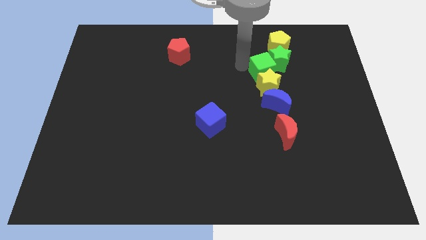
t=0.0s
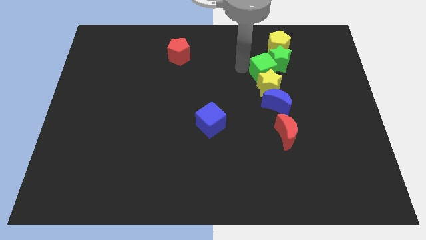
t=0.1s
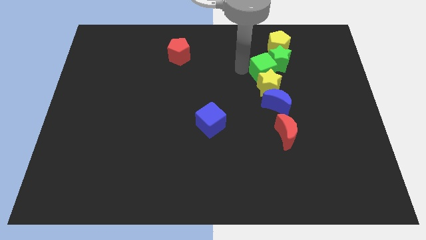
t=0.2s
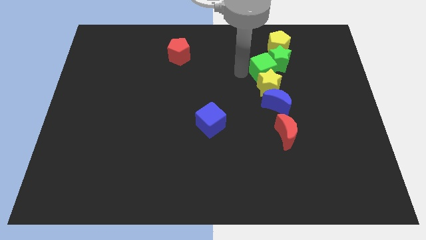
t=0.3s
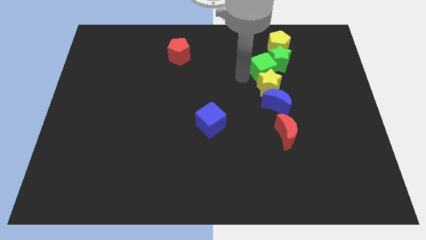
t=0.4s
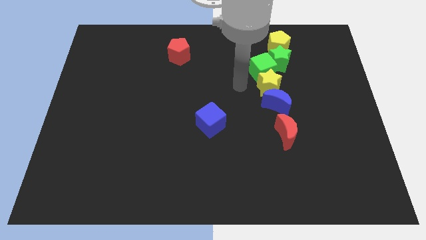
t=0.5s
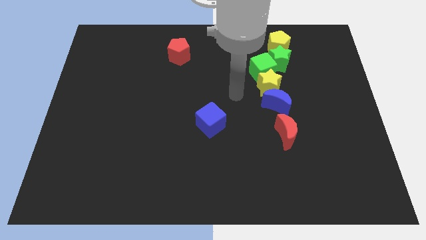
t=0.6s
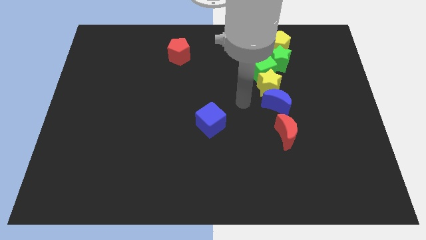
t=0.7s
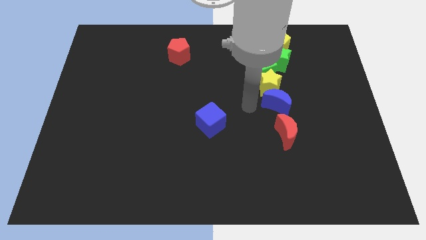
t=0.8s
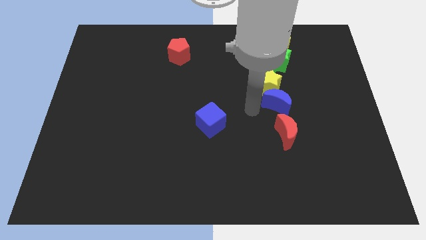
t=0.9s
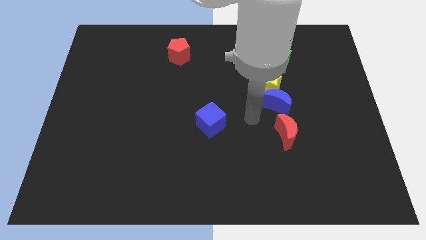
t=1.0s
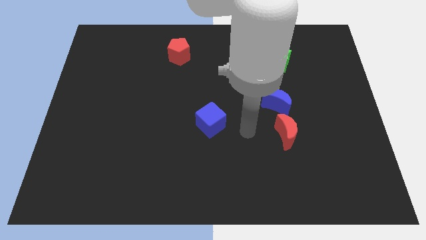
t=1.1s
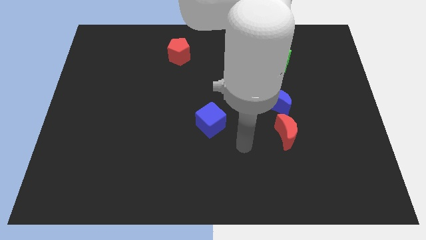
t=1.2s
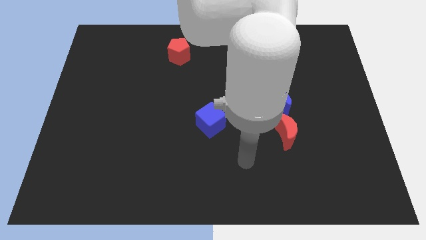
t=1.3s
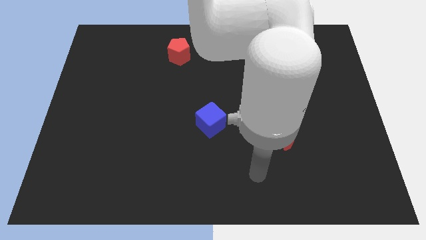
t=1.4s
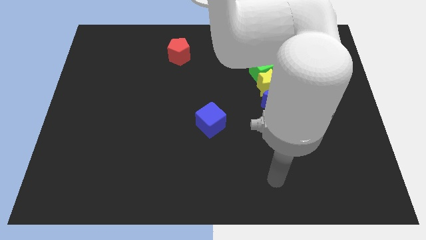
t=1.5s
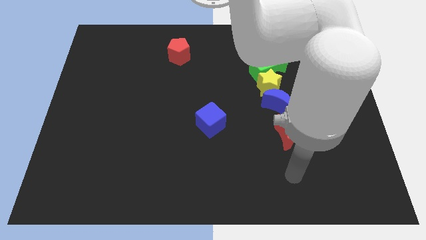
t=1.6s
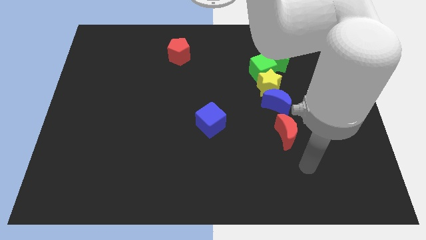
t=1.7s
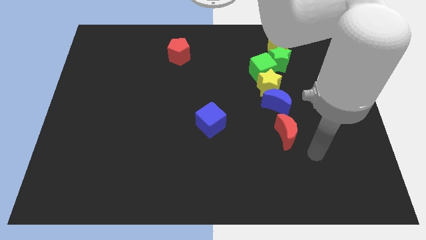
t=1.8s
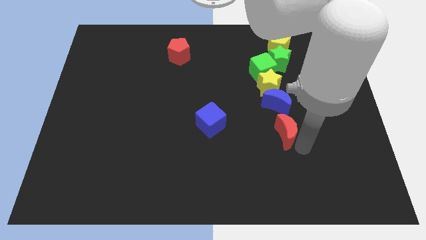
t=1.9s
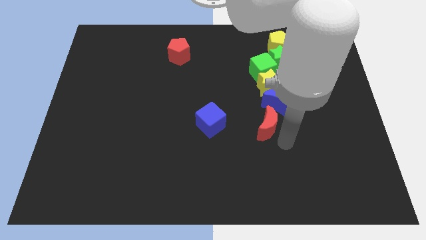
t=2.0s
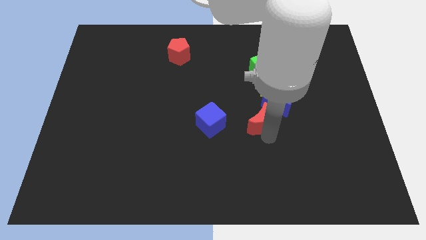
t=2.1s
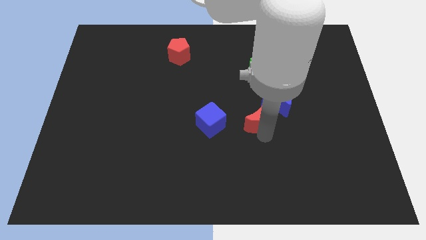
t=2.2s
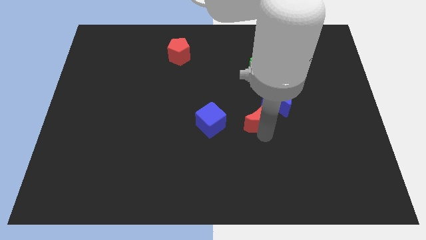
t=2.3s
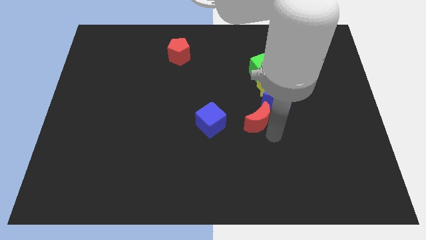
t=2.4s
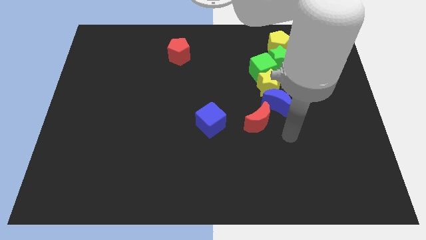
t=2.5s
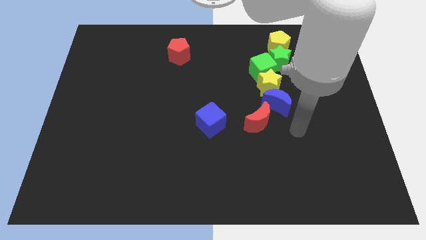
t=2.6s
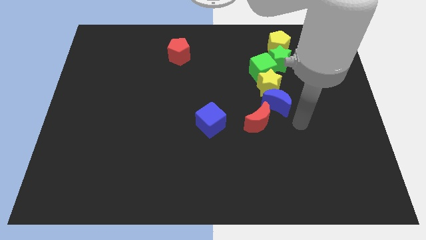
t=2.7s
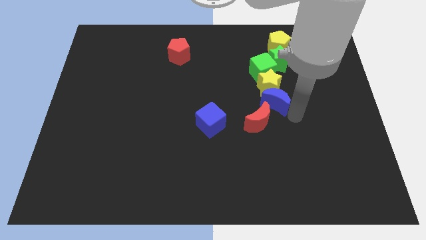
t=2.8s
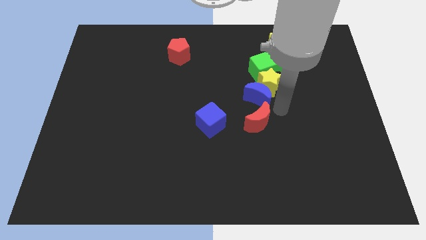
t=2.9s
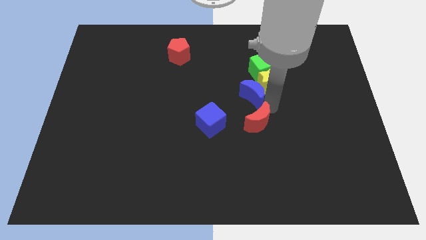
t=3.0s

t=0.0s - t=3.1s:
move the red crescent below the blue crescent

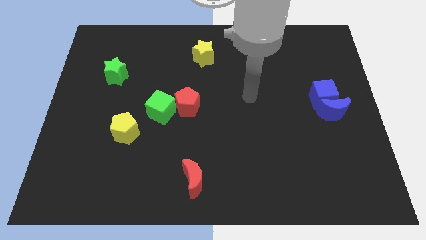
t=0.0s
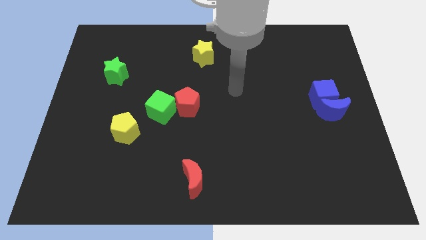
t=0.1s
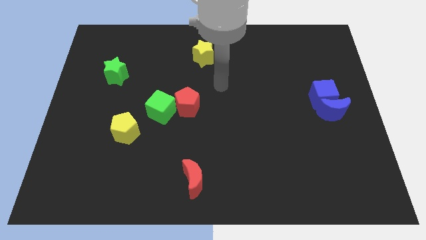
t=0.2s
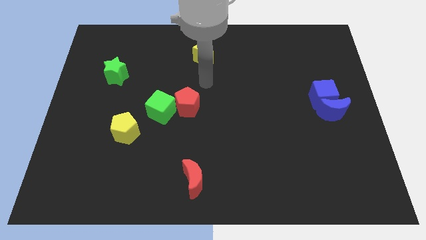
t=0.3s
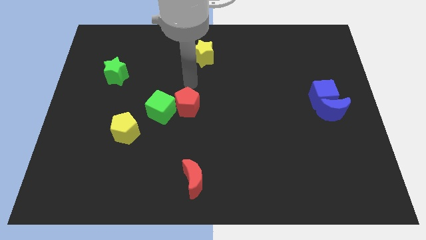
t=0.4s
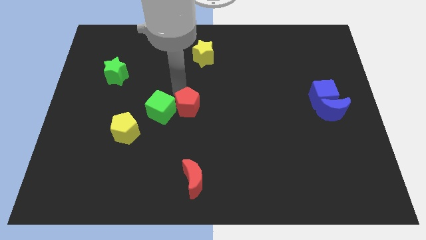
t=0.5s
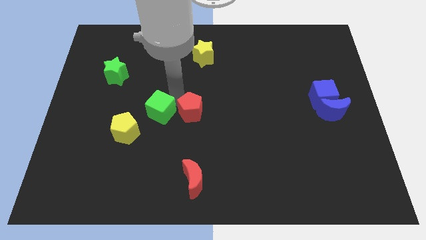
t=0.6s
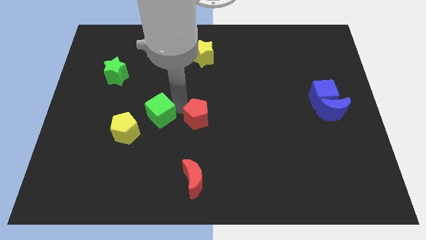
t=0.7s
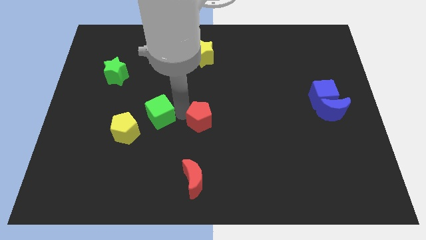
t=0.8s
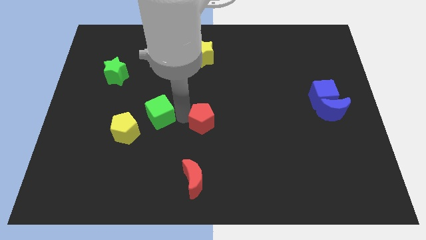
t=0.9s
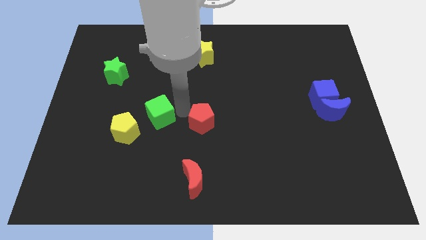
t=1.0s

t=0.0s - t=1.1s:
separate the red pentagon from the green cube

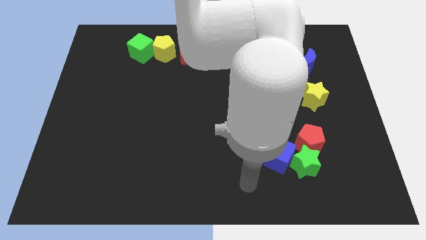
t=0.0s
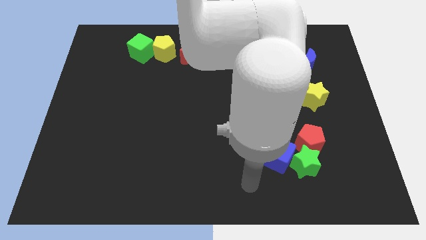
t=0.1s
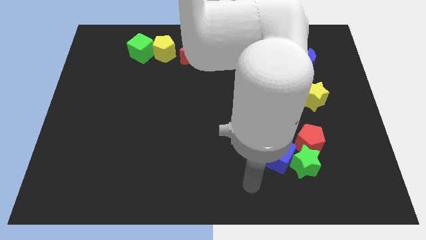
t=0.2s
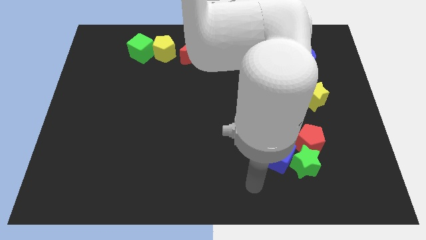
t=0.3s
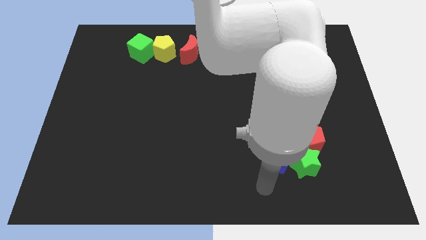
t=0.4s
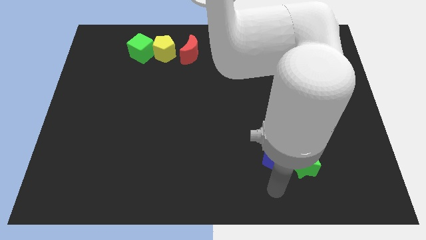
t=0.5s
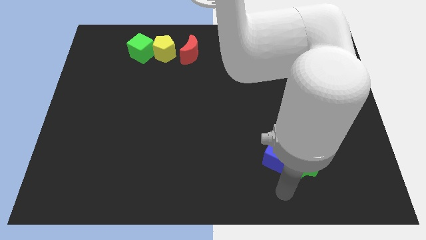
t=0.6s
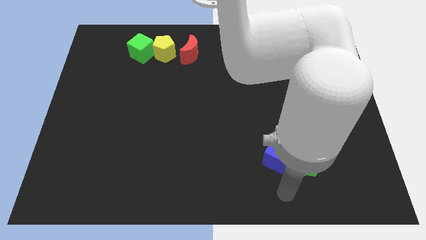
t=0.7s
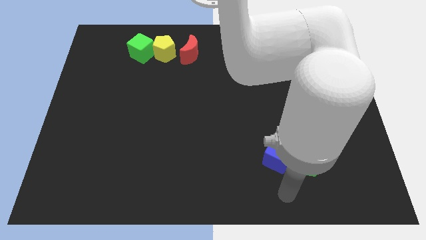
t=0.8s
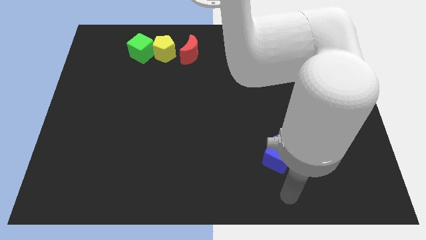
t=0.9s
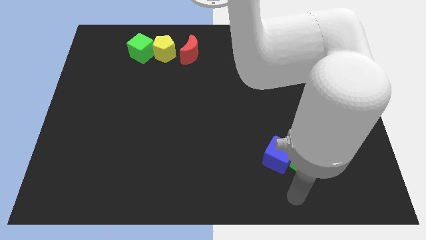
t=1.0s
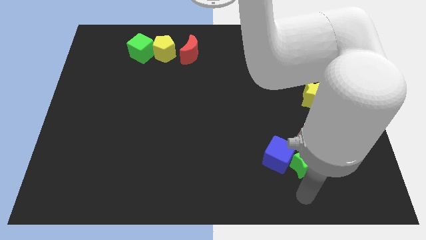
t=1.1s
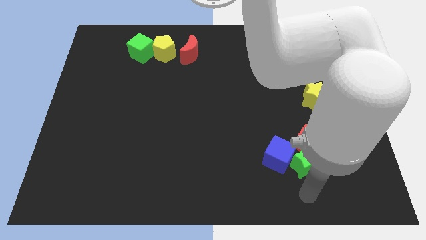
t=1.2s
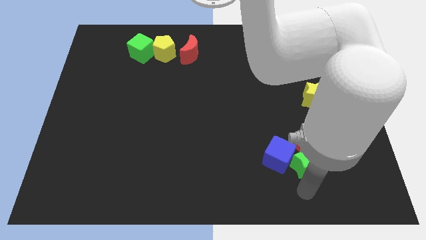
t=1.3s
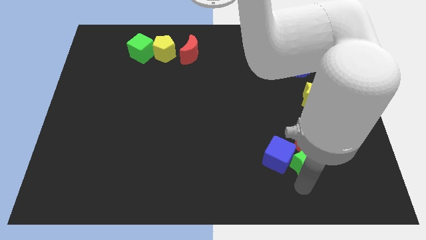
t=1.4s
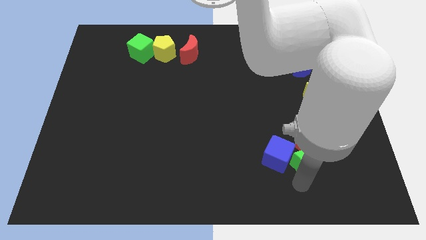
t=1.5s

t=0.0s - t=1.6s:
place your arm below green star

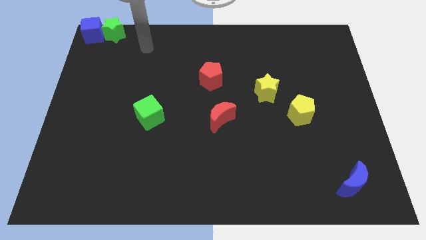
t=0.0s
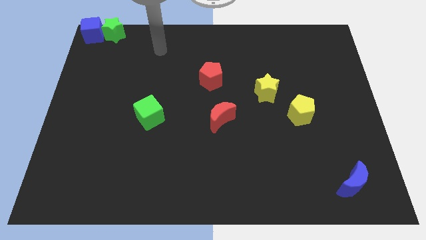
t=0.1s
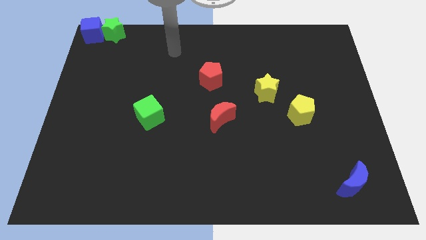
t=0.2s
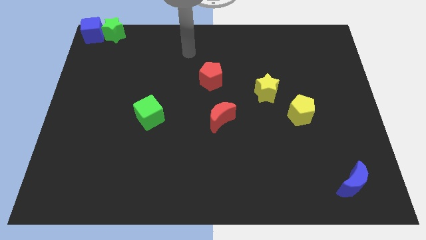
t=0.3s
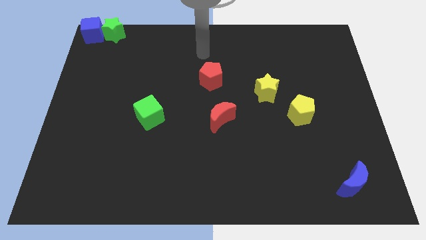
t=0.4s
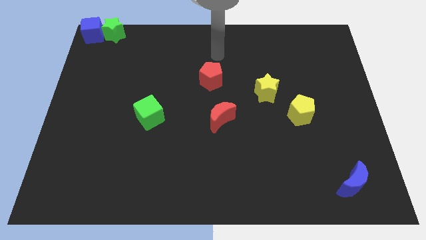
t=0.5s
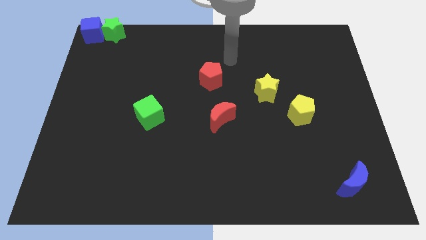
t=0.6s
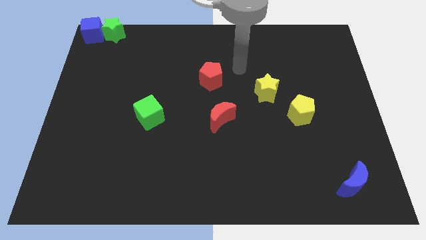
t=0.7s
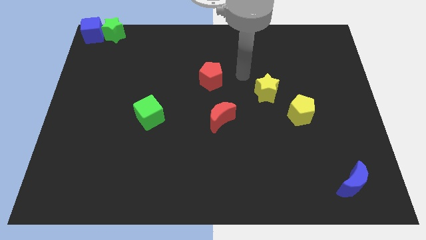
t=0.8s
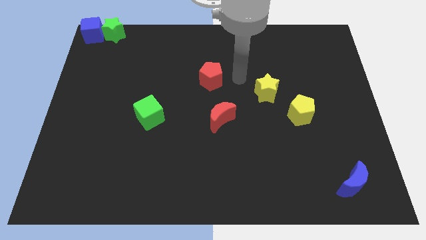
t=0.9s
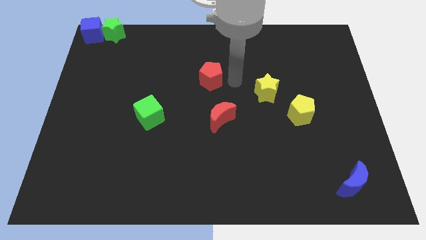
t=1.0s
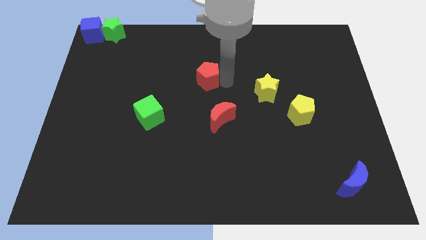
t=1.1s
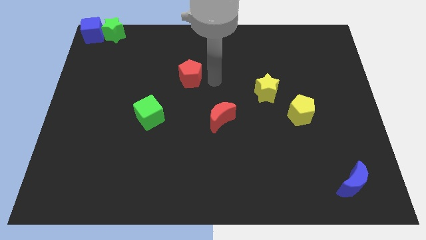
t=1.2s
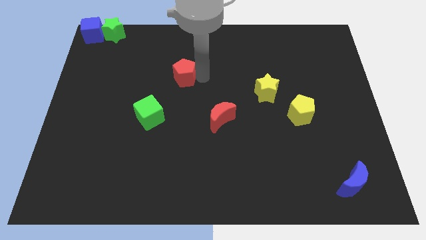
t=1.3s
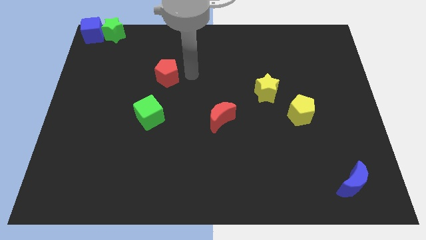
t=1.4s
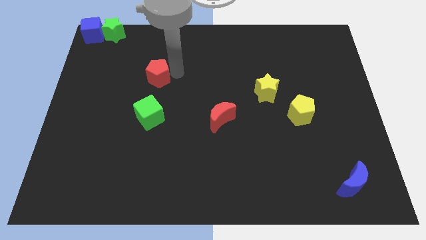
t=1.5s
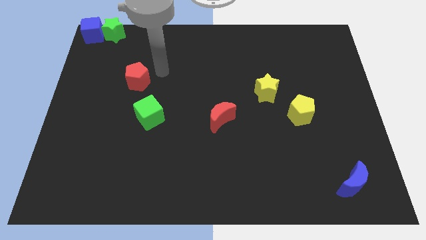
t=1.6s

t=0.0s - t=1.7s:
slide the red pentagon diagonally on the top left side of the red crescent

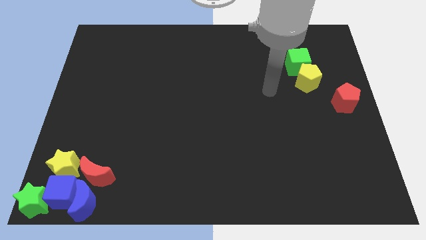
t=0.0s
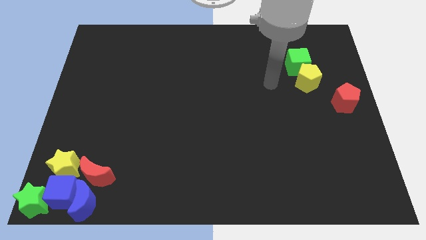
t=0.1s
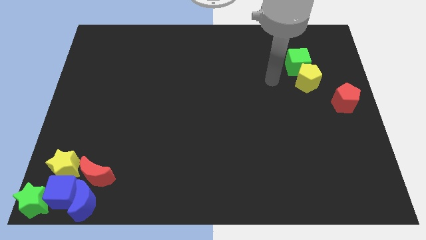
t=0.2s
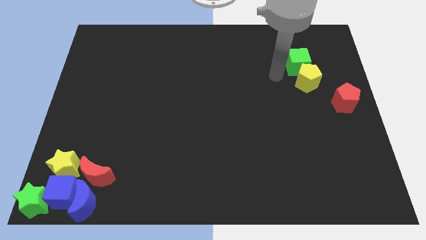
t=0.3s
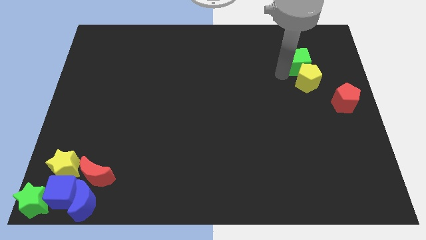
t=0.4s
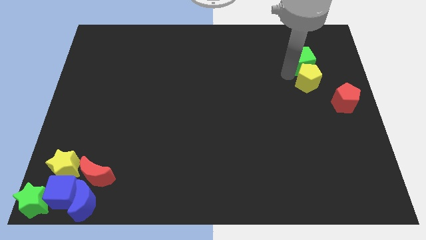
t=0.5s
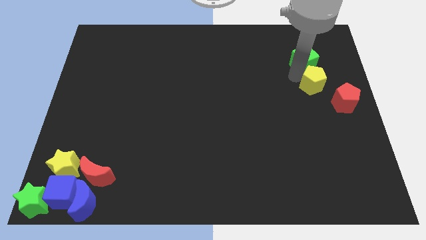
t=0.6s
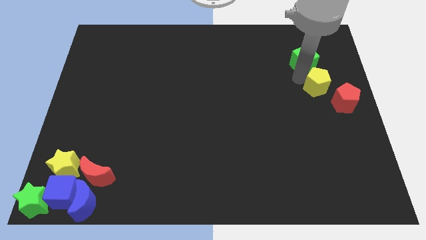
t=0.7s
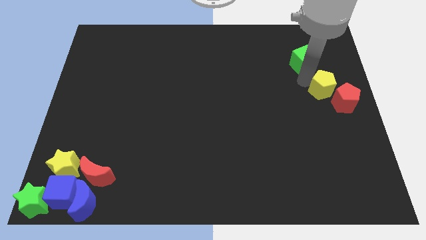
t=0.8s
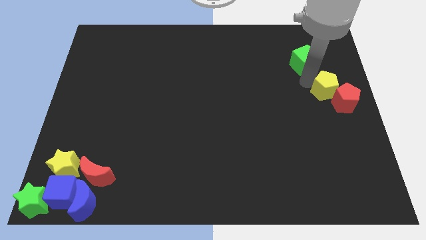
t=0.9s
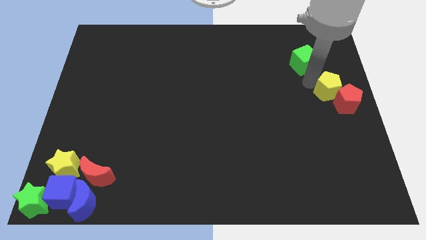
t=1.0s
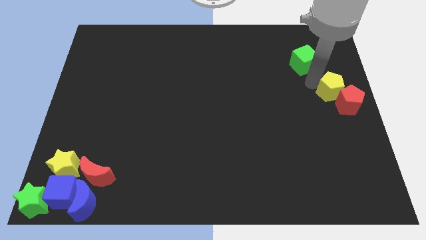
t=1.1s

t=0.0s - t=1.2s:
point your arm between yellow pentagon and green cube
